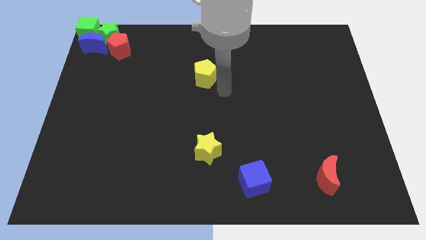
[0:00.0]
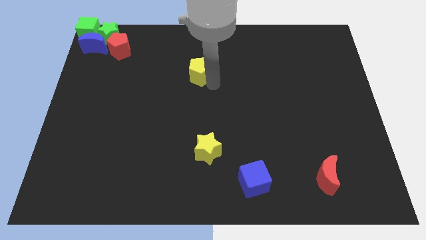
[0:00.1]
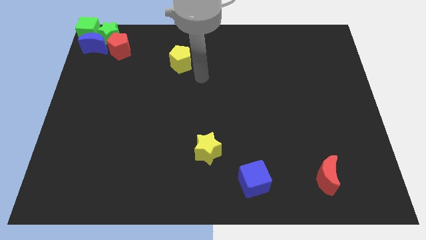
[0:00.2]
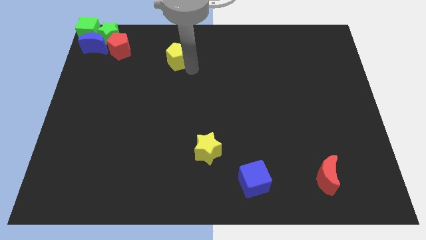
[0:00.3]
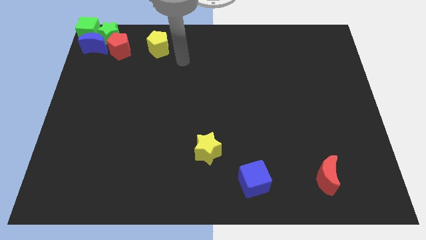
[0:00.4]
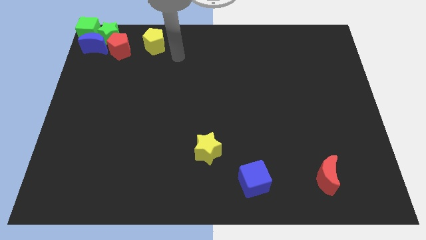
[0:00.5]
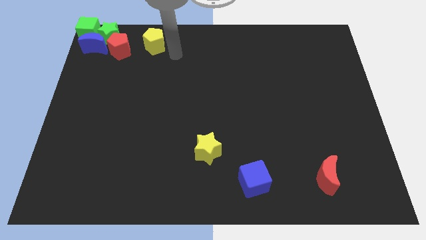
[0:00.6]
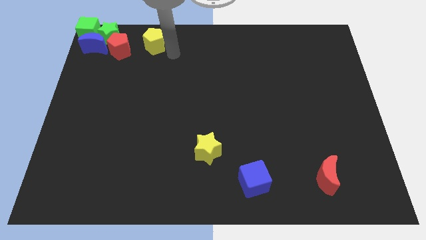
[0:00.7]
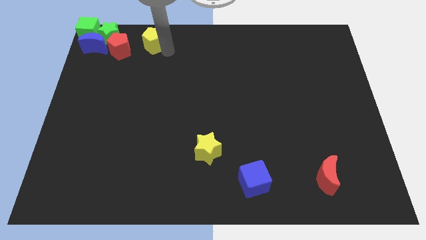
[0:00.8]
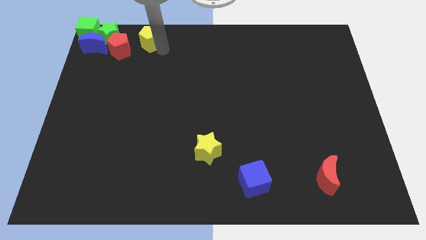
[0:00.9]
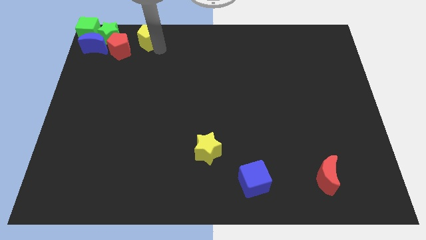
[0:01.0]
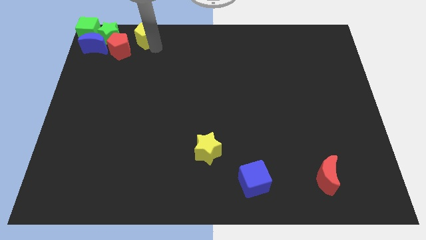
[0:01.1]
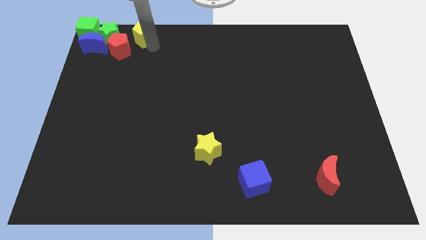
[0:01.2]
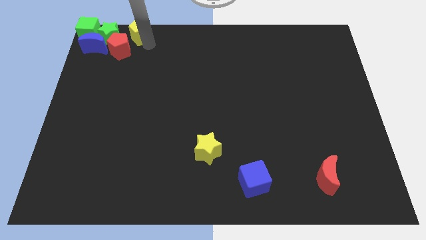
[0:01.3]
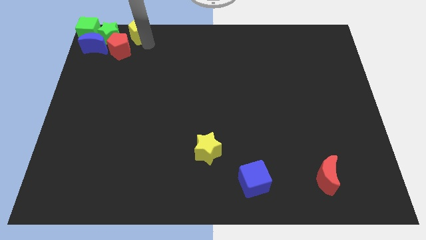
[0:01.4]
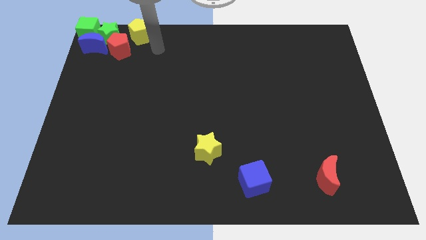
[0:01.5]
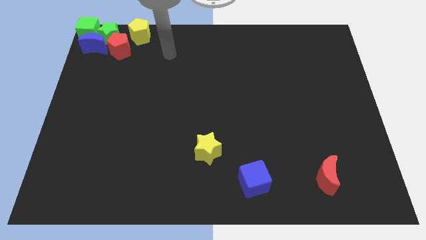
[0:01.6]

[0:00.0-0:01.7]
place yellow pentagon beside green star

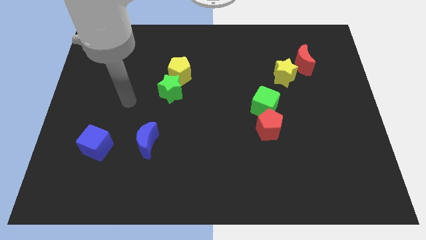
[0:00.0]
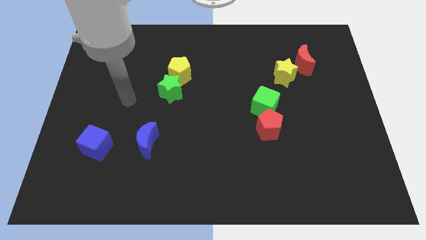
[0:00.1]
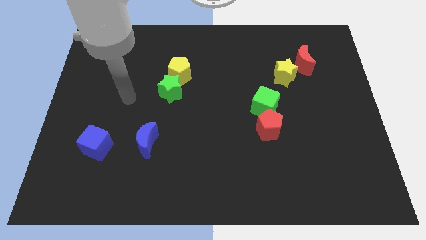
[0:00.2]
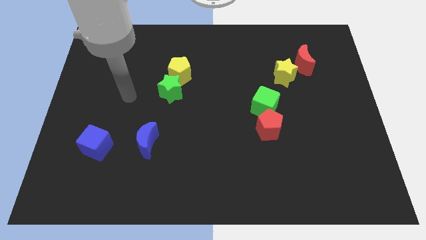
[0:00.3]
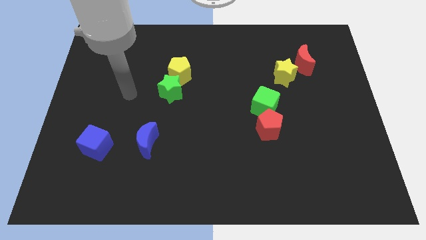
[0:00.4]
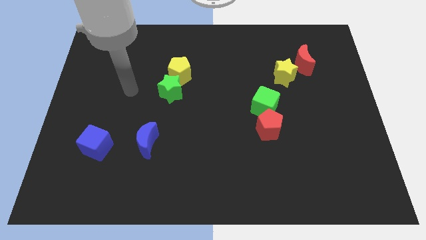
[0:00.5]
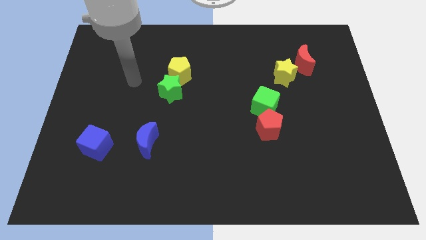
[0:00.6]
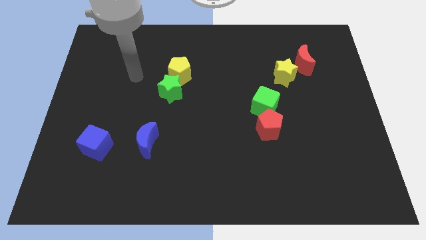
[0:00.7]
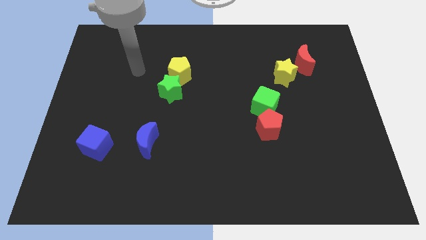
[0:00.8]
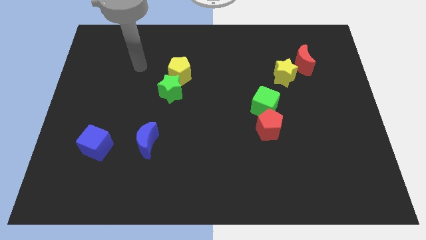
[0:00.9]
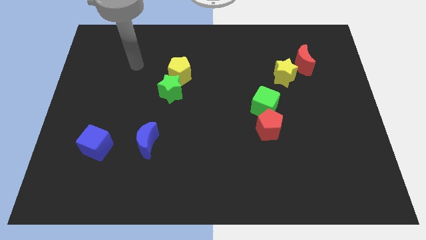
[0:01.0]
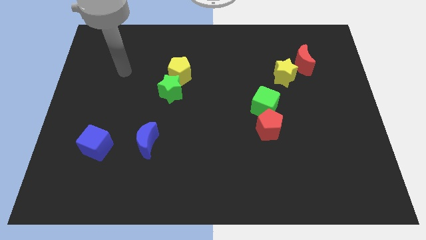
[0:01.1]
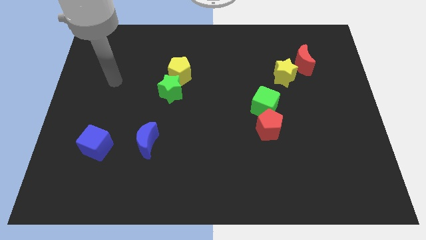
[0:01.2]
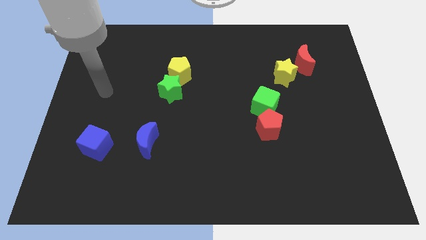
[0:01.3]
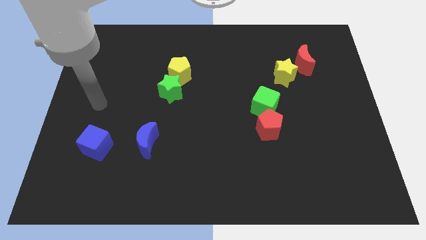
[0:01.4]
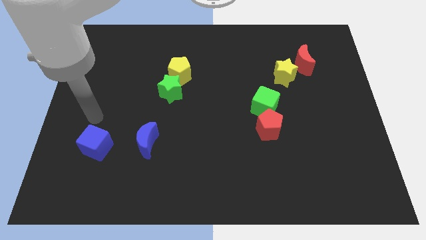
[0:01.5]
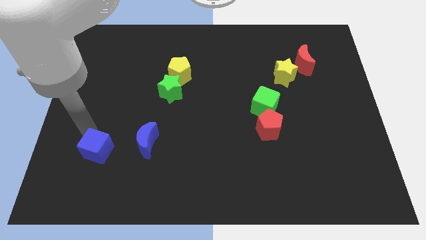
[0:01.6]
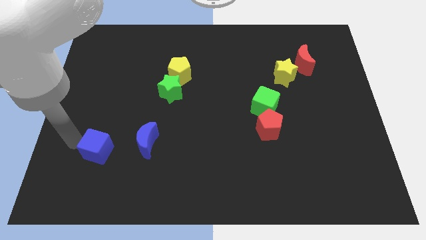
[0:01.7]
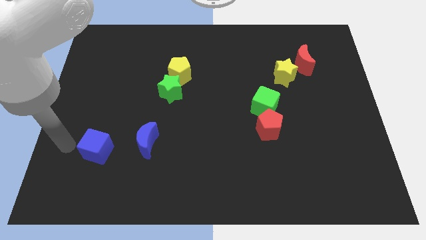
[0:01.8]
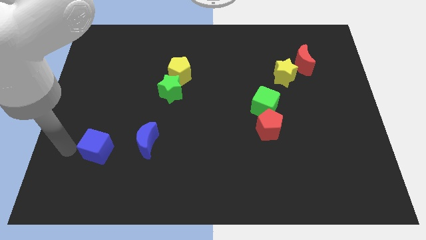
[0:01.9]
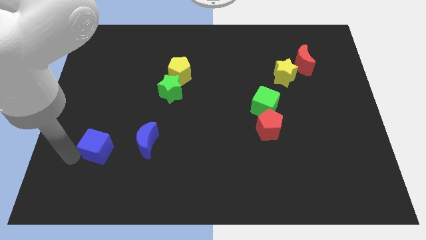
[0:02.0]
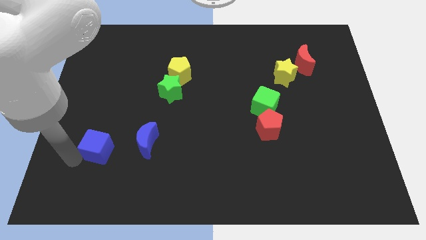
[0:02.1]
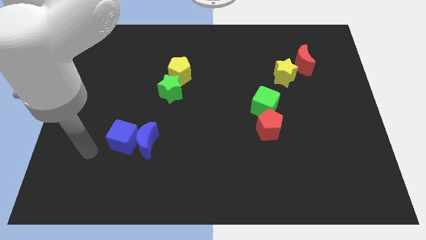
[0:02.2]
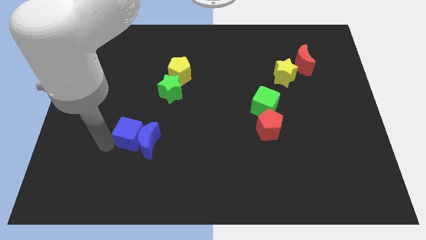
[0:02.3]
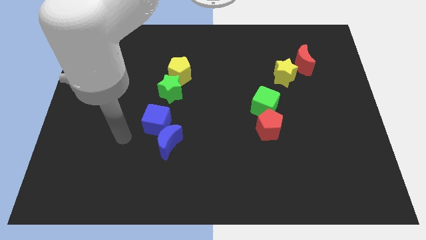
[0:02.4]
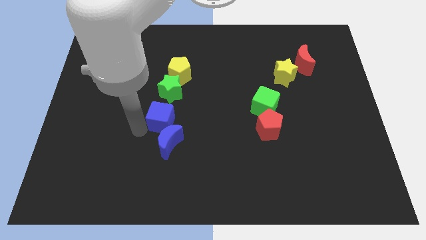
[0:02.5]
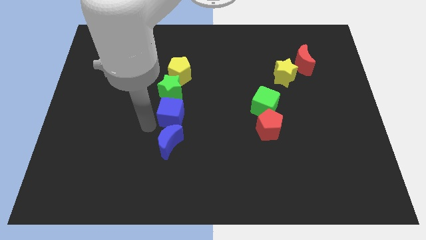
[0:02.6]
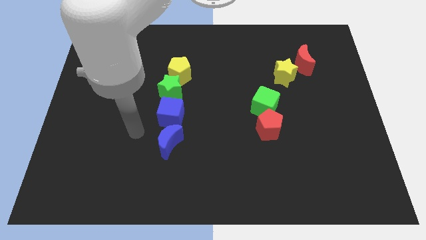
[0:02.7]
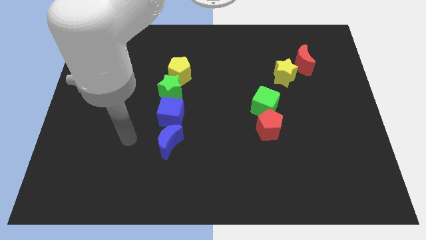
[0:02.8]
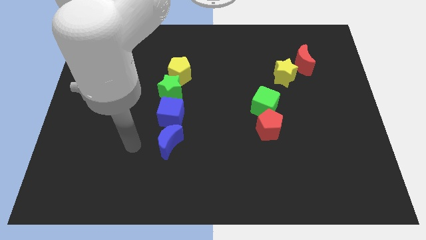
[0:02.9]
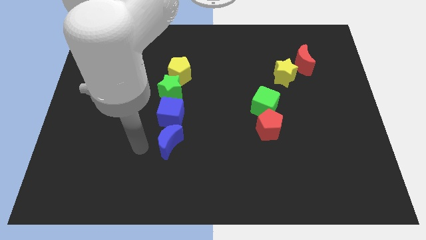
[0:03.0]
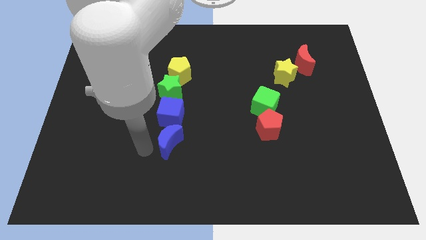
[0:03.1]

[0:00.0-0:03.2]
push the blue cube below the green star

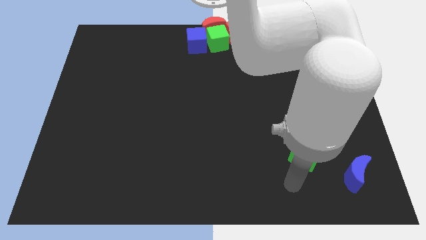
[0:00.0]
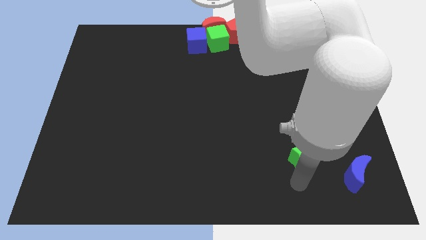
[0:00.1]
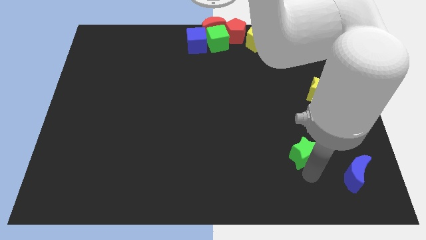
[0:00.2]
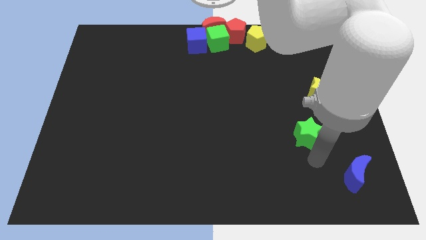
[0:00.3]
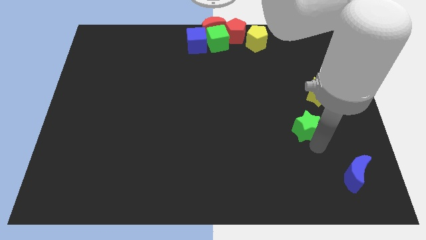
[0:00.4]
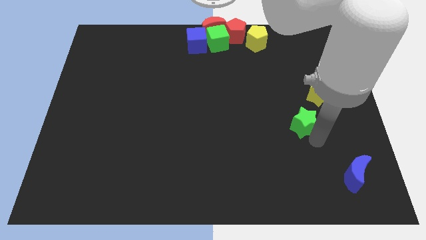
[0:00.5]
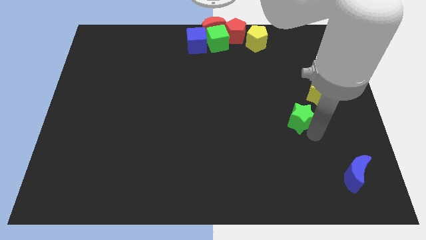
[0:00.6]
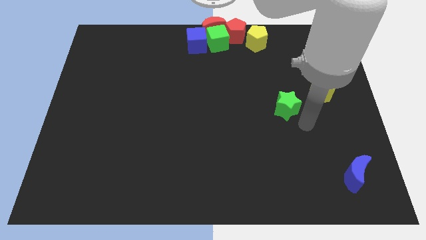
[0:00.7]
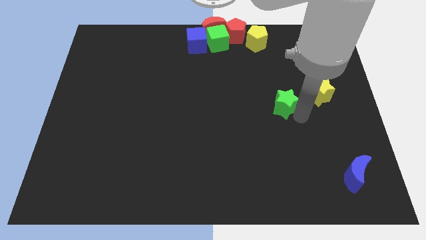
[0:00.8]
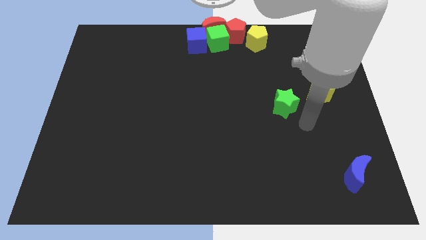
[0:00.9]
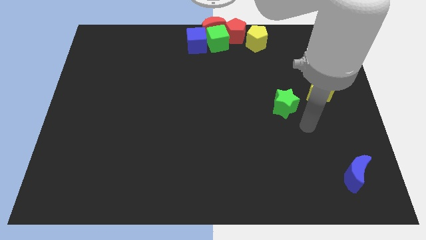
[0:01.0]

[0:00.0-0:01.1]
move the green star to the top of the board

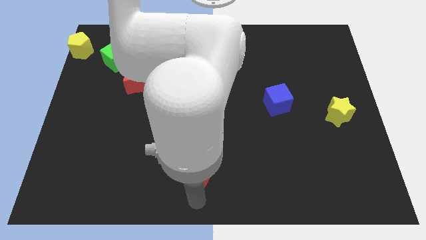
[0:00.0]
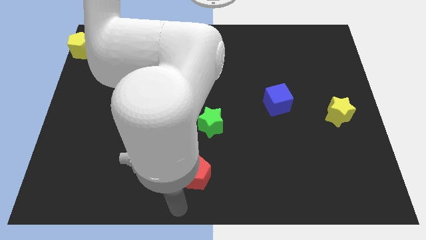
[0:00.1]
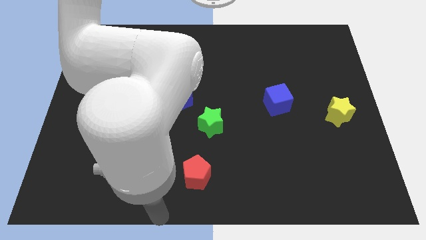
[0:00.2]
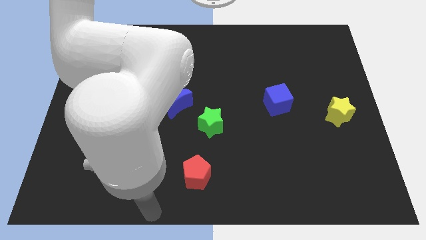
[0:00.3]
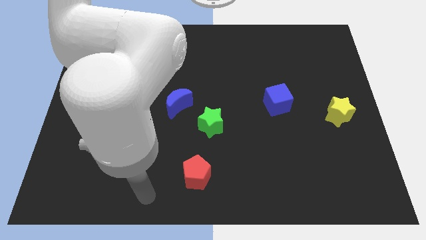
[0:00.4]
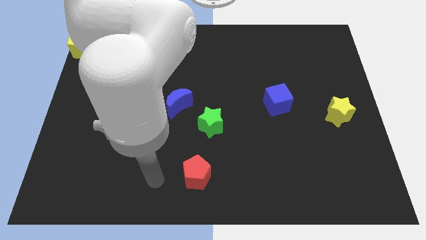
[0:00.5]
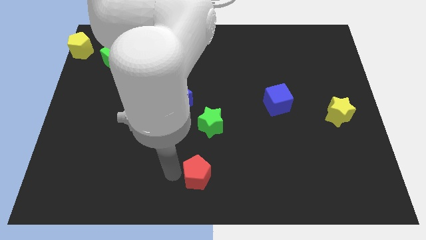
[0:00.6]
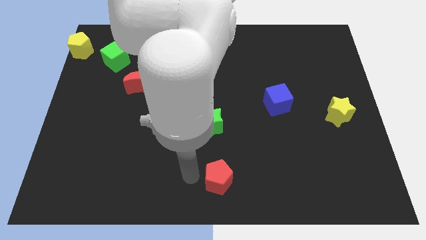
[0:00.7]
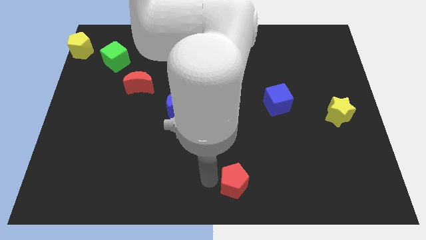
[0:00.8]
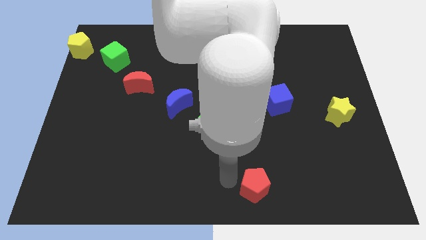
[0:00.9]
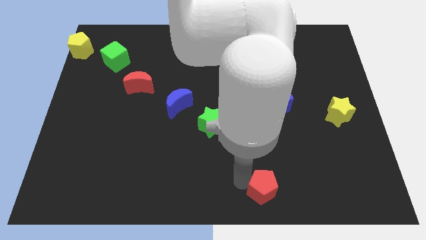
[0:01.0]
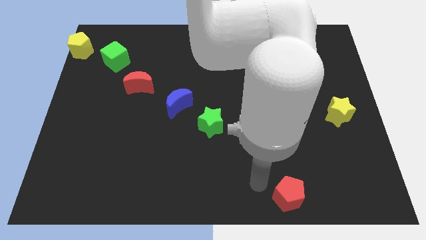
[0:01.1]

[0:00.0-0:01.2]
place red pentagon to the right bottom of the board

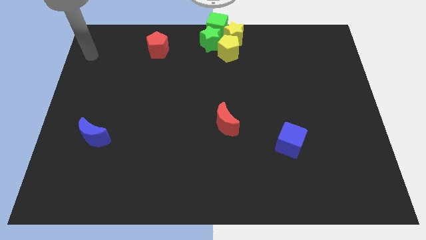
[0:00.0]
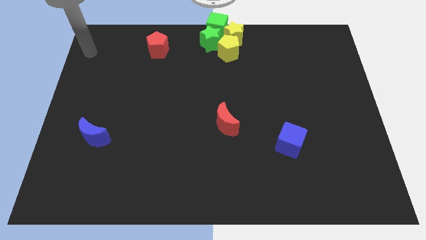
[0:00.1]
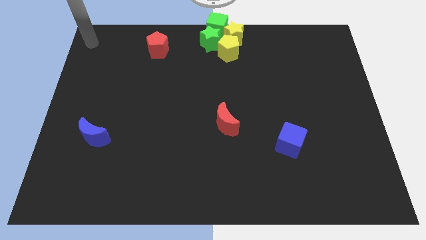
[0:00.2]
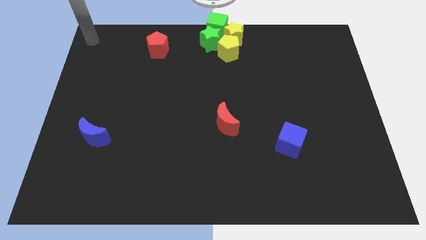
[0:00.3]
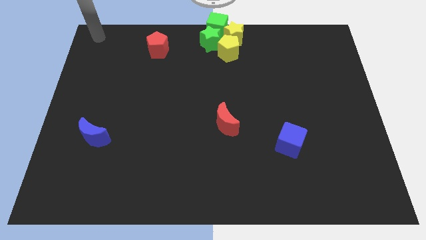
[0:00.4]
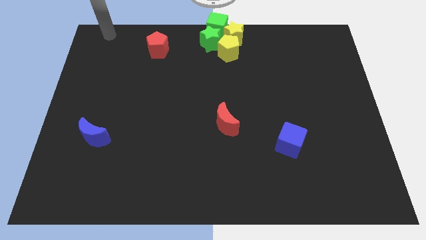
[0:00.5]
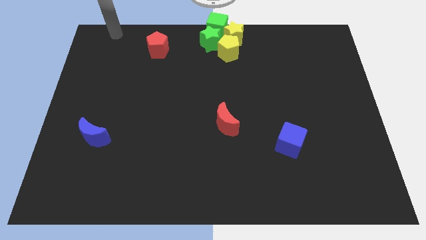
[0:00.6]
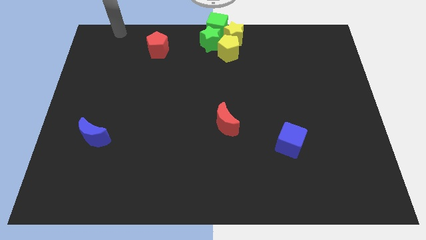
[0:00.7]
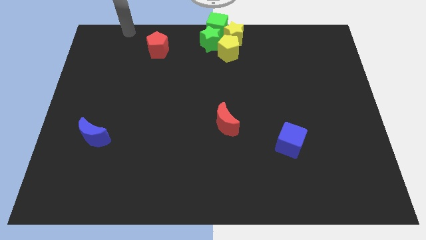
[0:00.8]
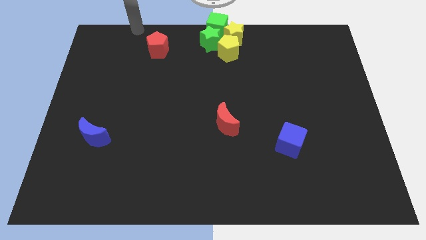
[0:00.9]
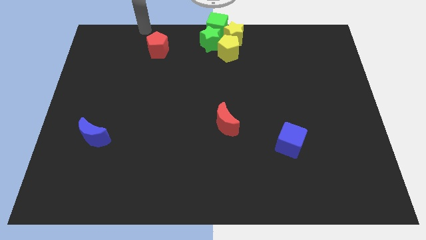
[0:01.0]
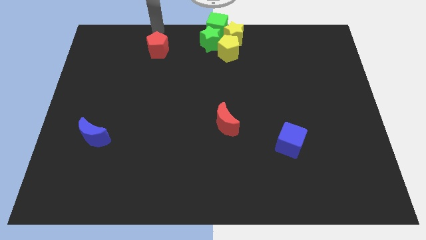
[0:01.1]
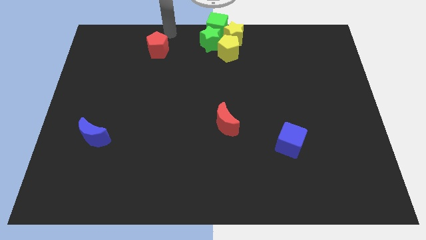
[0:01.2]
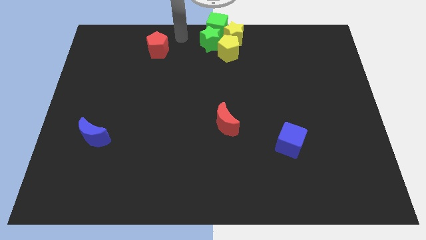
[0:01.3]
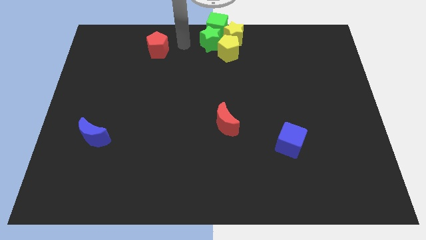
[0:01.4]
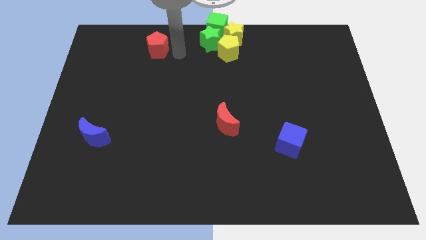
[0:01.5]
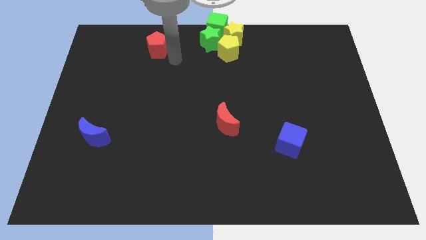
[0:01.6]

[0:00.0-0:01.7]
move your arm around the red pentagon
